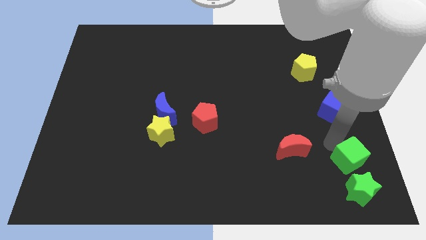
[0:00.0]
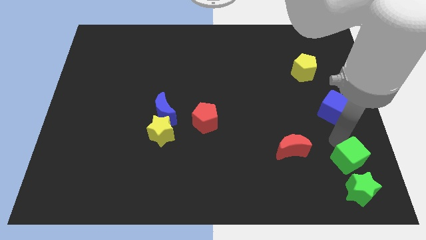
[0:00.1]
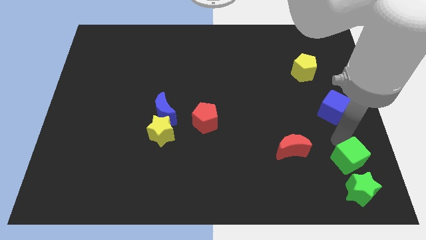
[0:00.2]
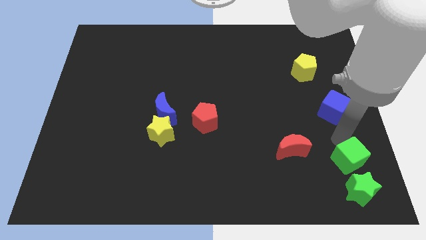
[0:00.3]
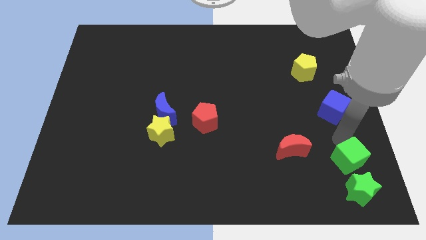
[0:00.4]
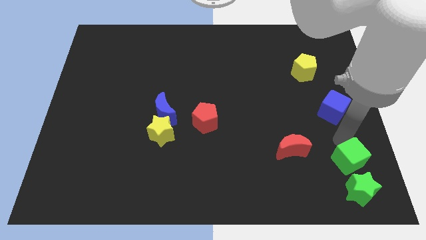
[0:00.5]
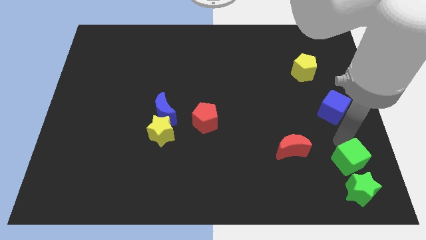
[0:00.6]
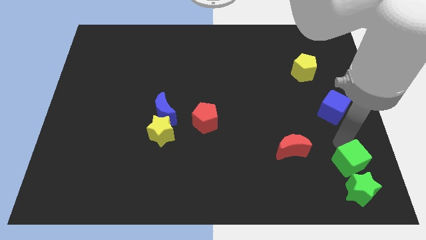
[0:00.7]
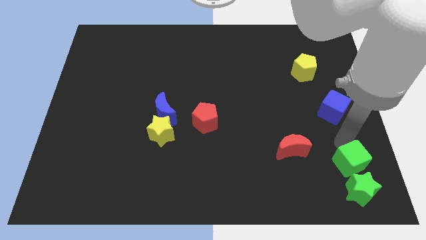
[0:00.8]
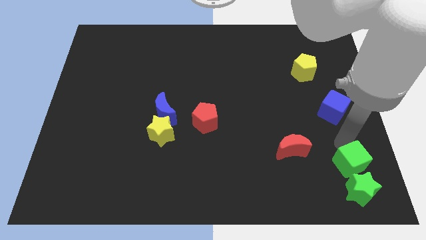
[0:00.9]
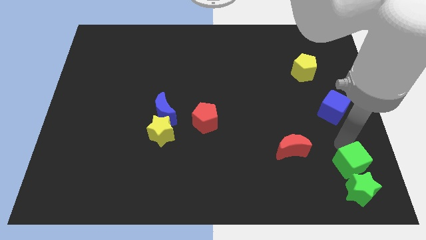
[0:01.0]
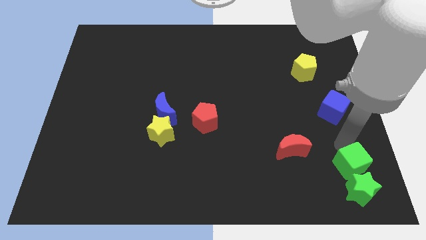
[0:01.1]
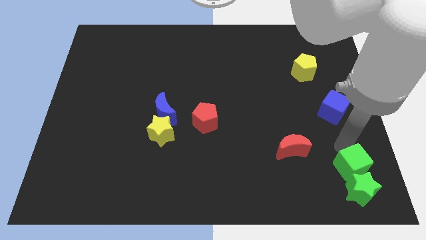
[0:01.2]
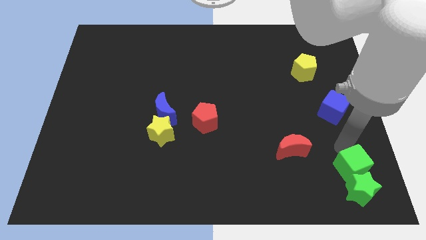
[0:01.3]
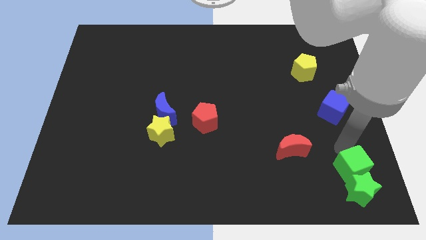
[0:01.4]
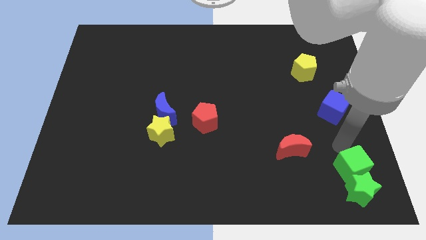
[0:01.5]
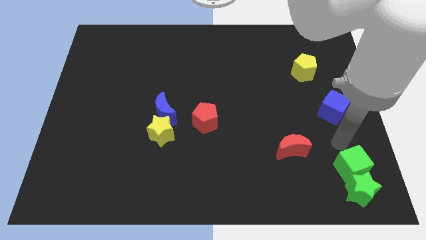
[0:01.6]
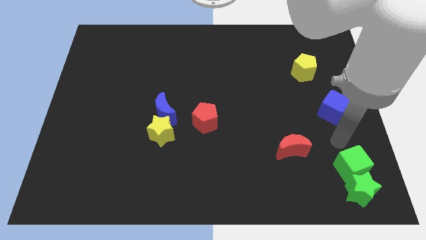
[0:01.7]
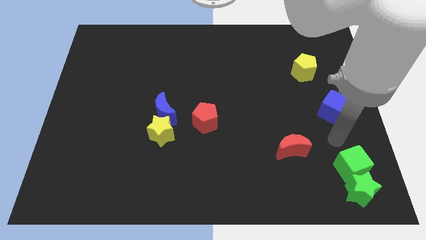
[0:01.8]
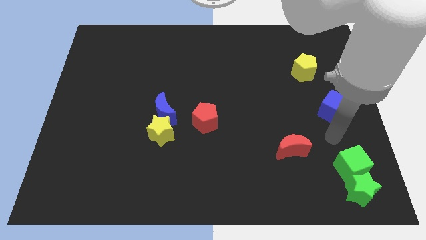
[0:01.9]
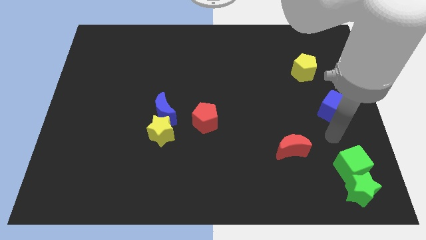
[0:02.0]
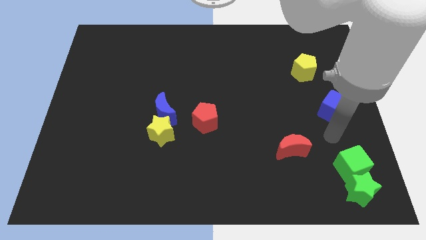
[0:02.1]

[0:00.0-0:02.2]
slide green cube into green star

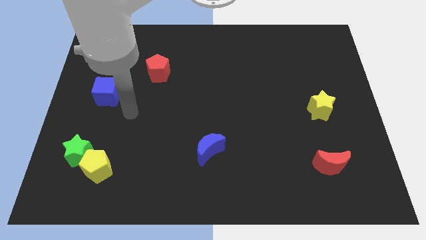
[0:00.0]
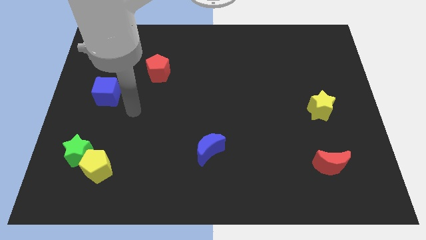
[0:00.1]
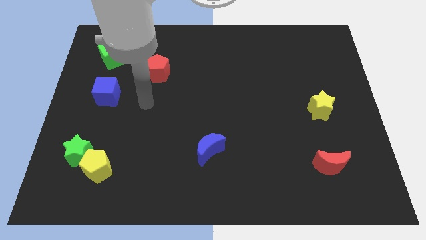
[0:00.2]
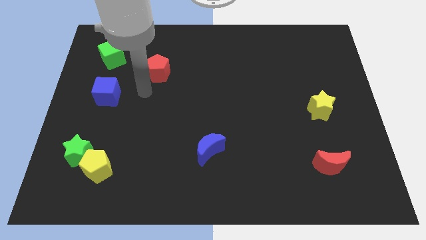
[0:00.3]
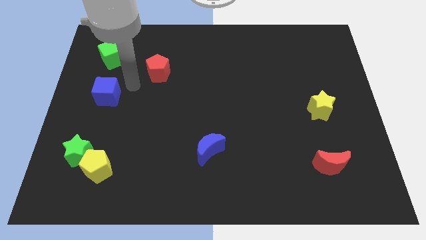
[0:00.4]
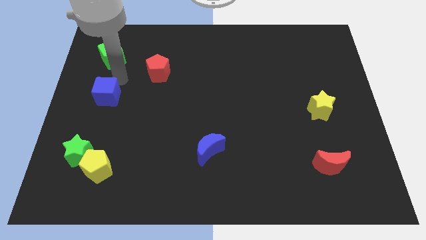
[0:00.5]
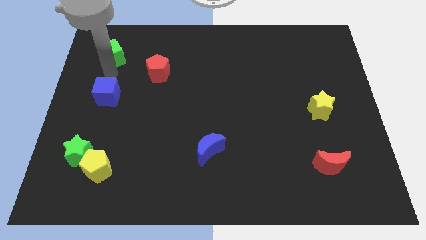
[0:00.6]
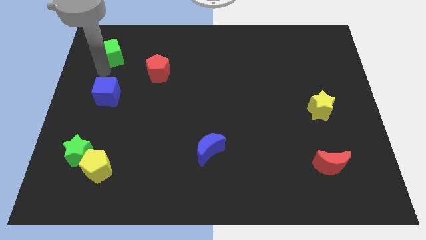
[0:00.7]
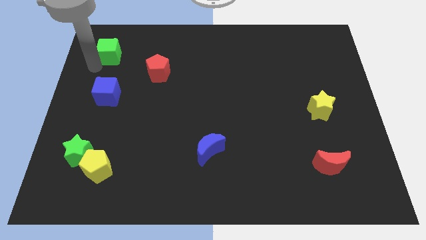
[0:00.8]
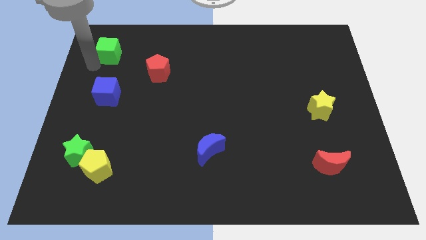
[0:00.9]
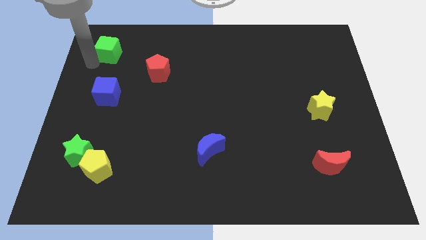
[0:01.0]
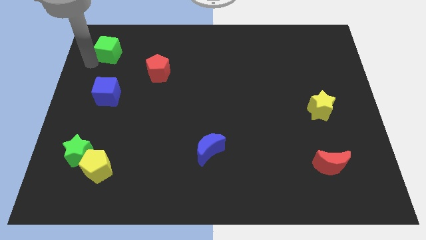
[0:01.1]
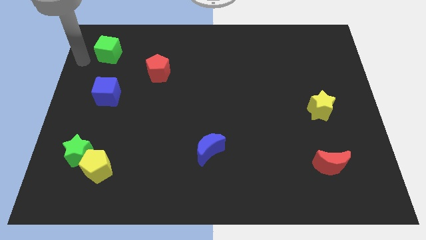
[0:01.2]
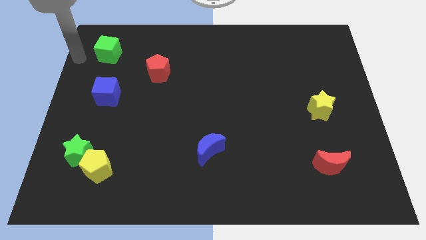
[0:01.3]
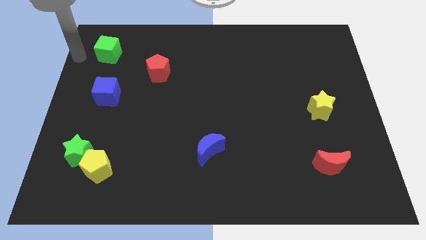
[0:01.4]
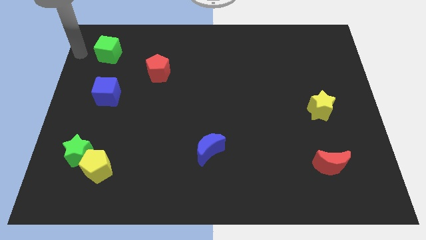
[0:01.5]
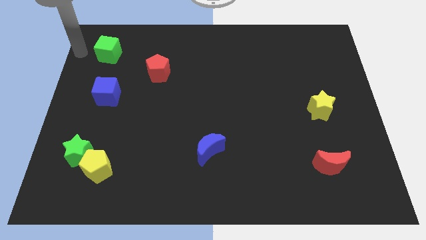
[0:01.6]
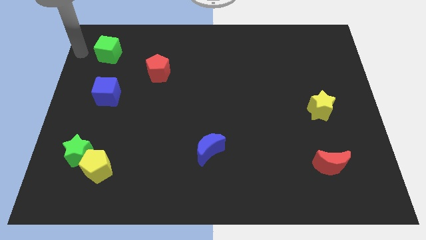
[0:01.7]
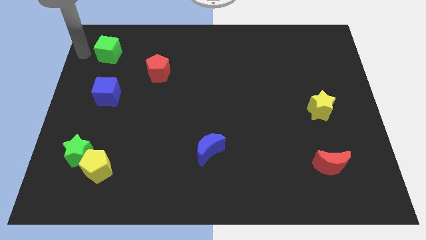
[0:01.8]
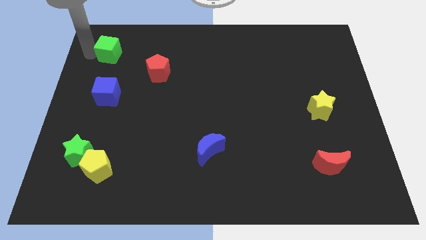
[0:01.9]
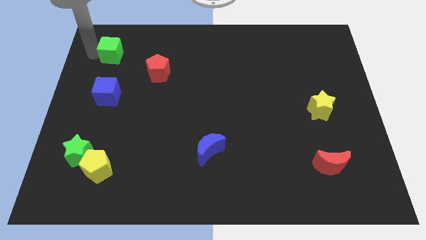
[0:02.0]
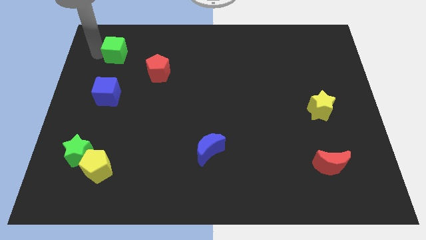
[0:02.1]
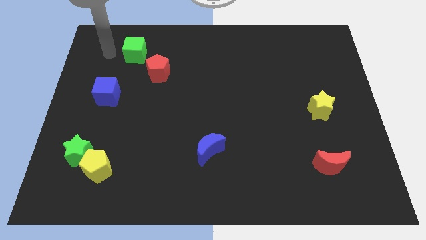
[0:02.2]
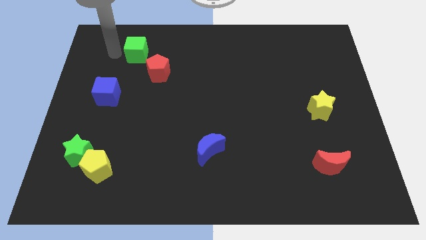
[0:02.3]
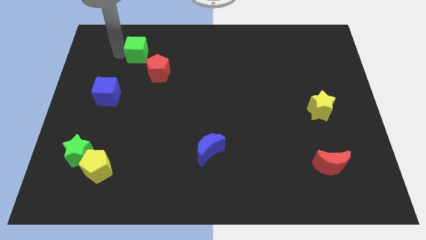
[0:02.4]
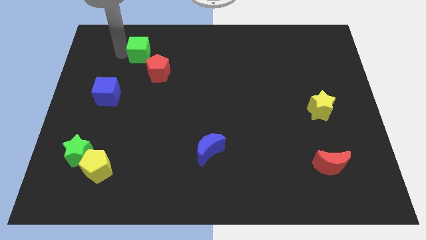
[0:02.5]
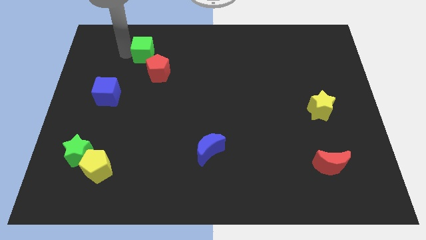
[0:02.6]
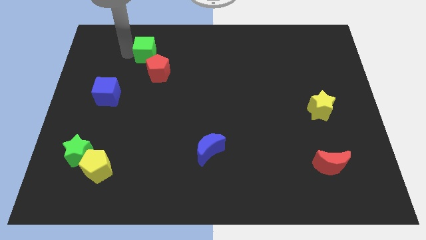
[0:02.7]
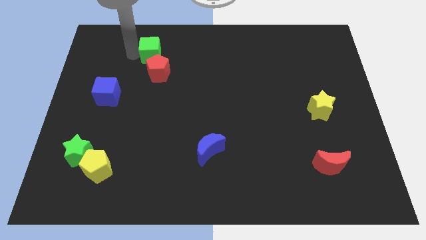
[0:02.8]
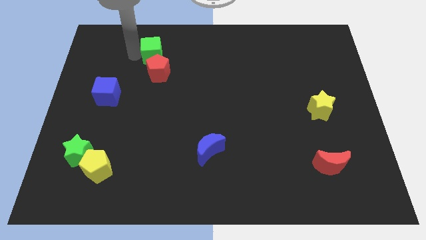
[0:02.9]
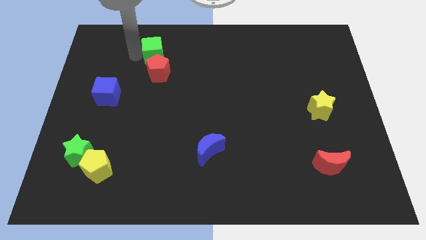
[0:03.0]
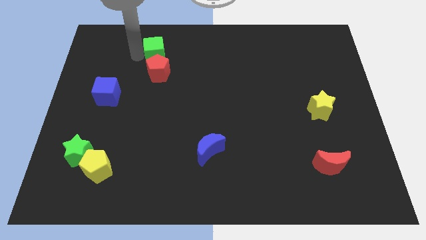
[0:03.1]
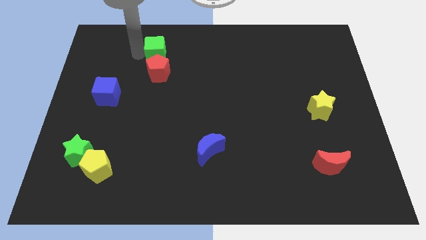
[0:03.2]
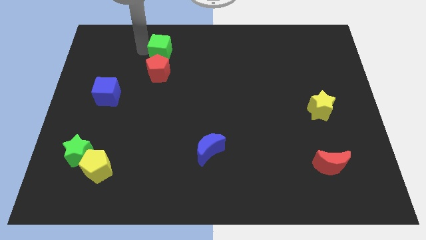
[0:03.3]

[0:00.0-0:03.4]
place the green cube above the red pentagon

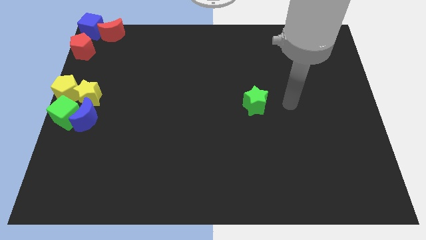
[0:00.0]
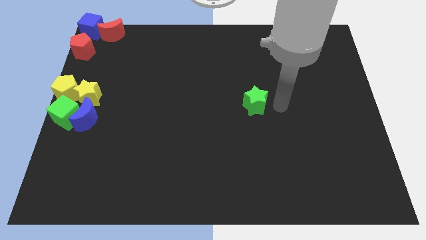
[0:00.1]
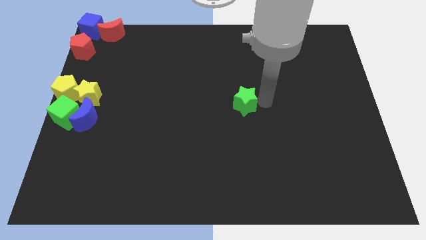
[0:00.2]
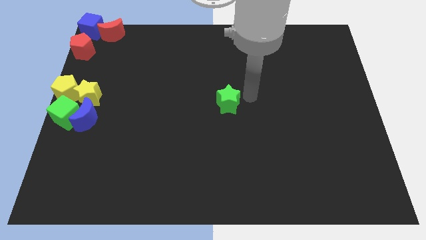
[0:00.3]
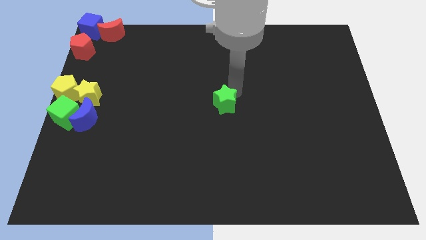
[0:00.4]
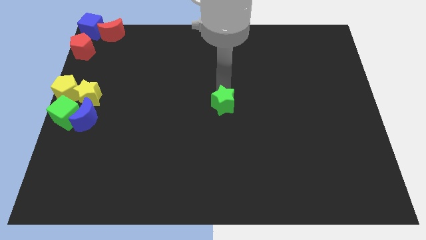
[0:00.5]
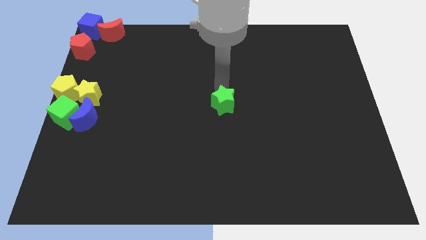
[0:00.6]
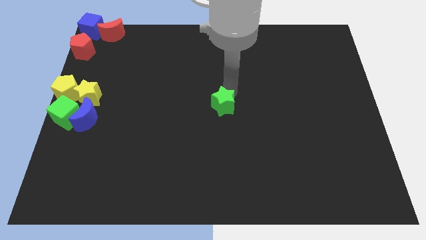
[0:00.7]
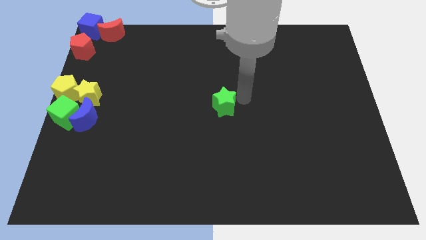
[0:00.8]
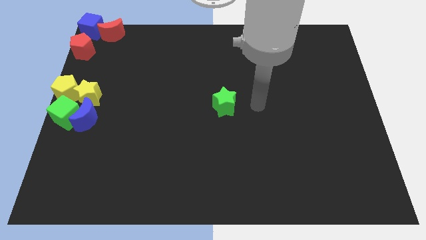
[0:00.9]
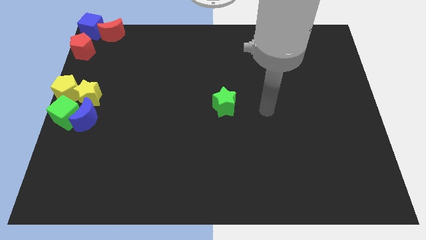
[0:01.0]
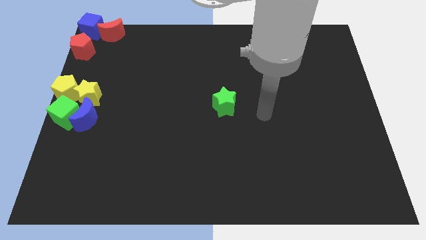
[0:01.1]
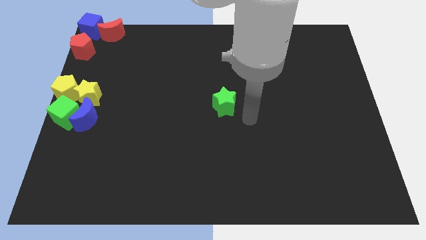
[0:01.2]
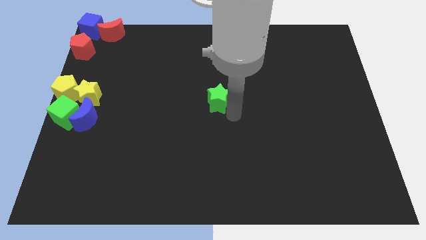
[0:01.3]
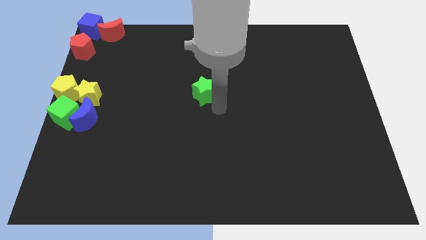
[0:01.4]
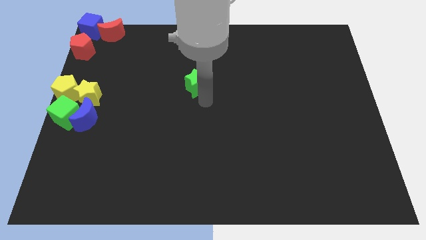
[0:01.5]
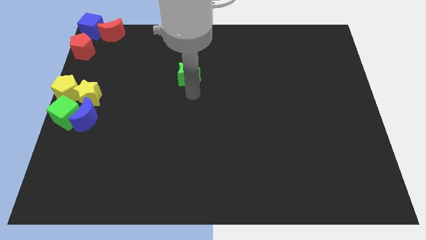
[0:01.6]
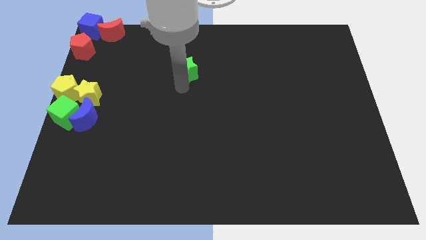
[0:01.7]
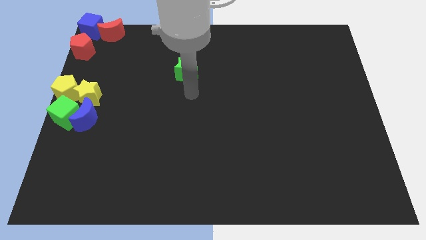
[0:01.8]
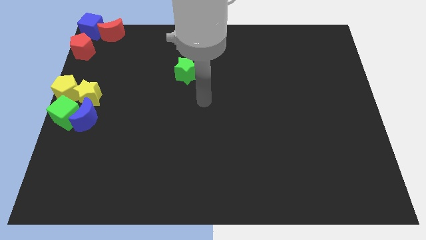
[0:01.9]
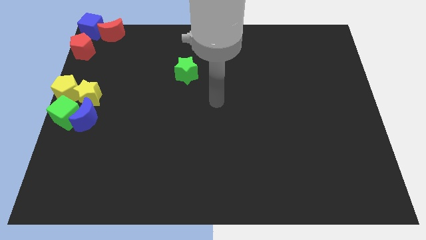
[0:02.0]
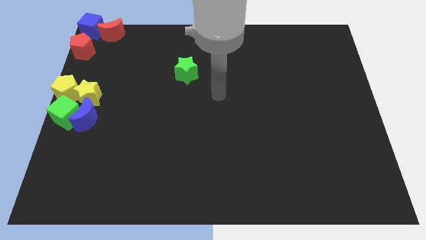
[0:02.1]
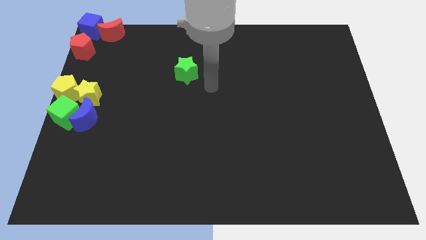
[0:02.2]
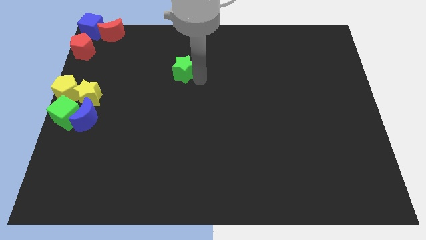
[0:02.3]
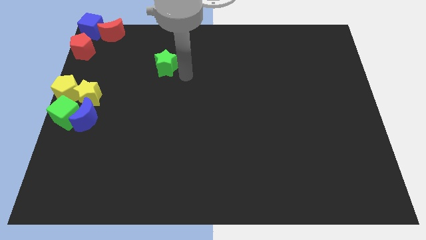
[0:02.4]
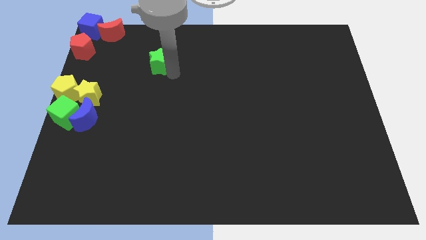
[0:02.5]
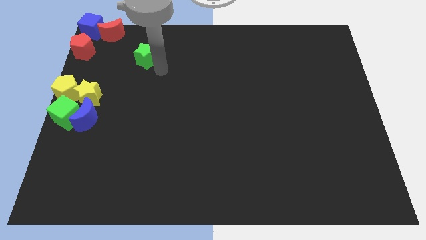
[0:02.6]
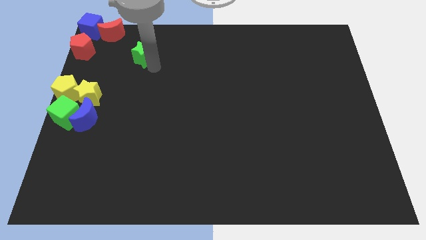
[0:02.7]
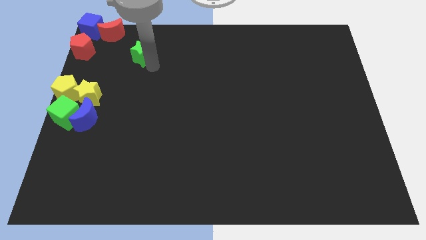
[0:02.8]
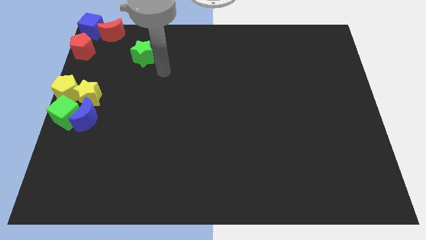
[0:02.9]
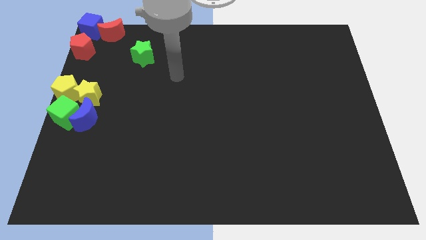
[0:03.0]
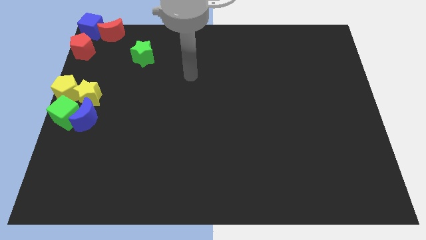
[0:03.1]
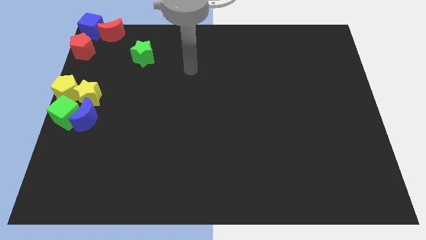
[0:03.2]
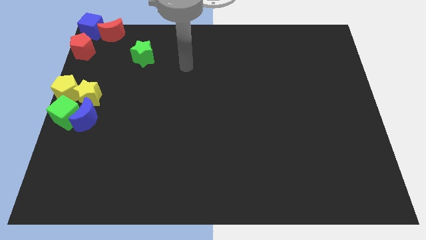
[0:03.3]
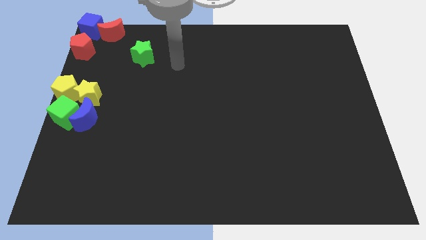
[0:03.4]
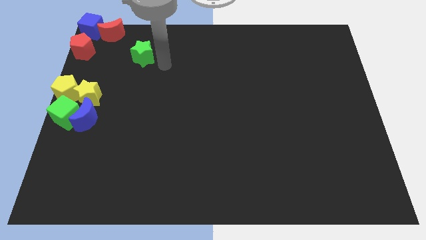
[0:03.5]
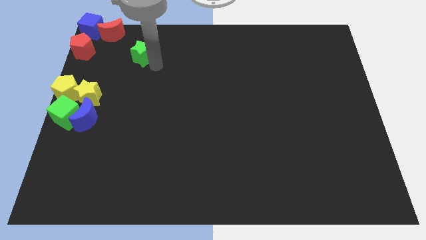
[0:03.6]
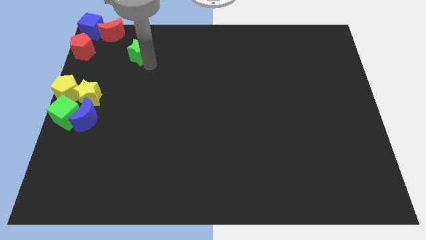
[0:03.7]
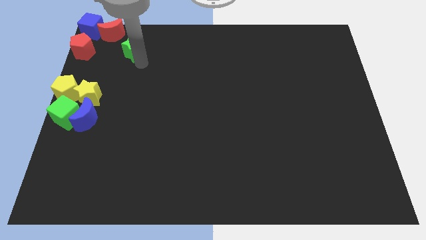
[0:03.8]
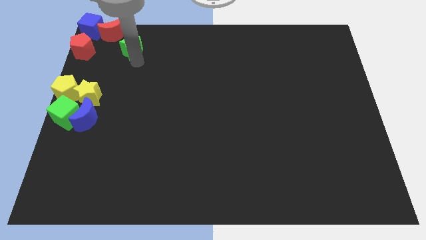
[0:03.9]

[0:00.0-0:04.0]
place the green star bottom to the red crescent
